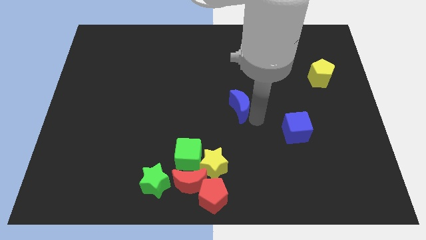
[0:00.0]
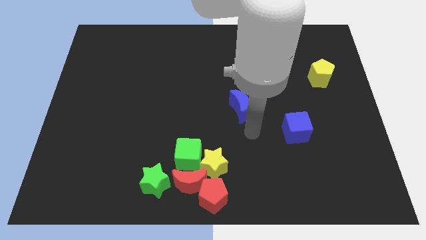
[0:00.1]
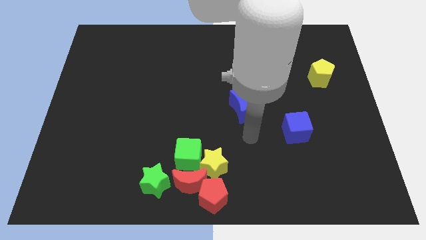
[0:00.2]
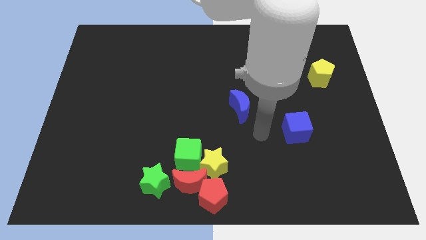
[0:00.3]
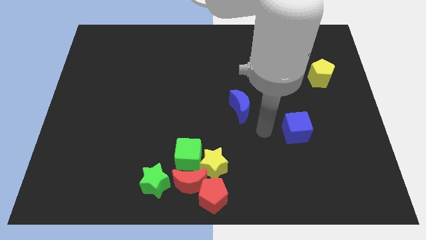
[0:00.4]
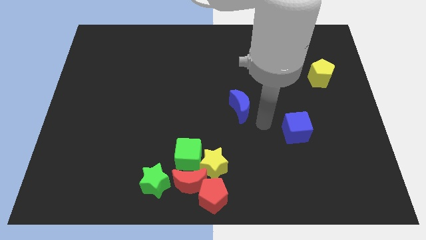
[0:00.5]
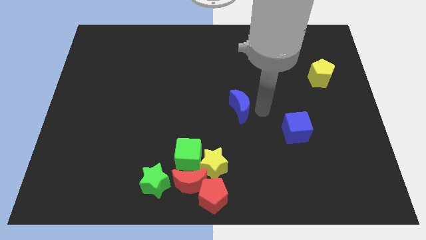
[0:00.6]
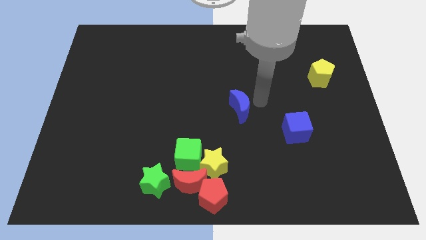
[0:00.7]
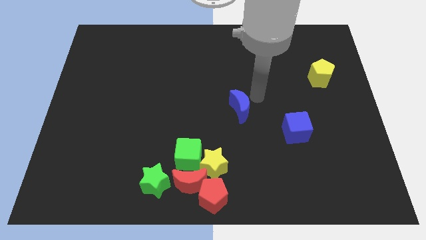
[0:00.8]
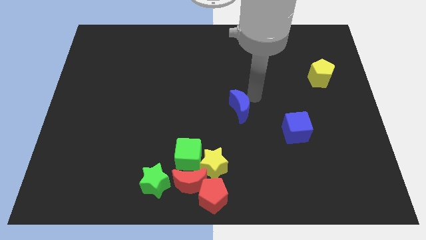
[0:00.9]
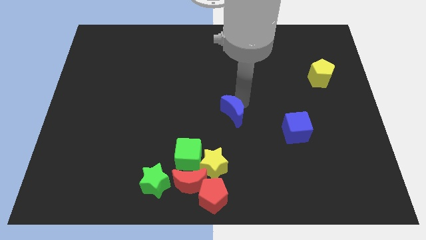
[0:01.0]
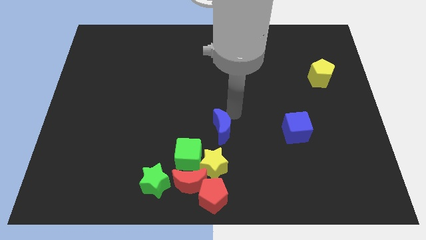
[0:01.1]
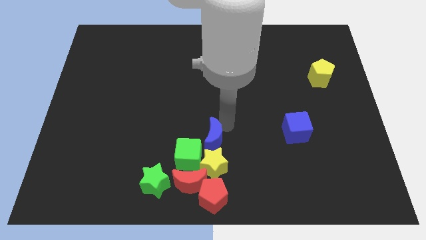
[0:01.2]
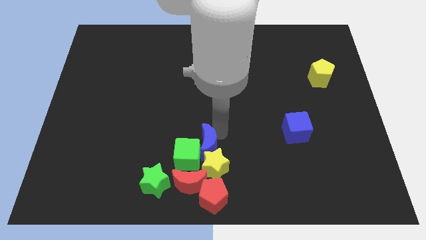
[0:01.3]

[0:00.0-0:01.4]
add the blue crescent to the top of the group of blocks

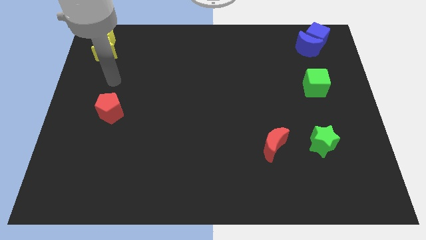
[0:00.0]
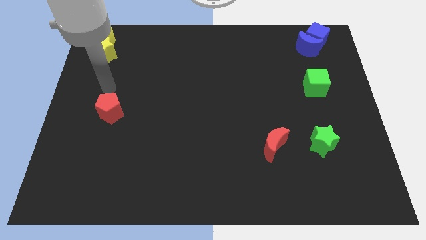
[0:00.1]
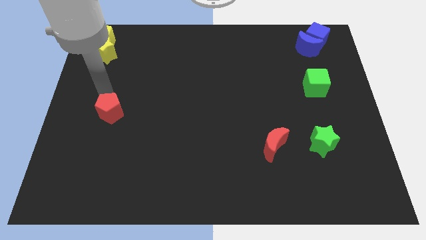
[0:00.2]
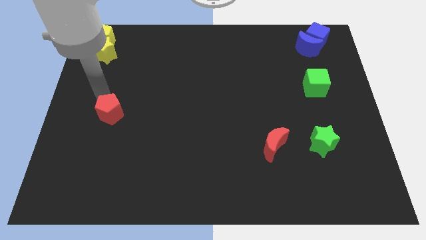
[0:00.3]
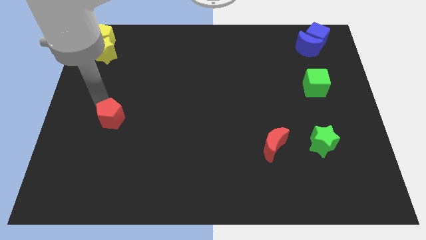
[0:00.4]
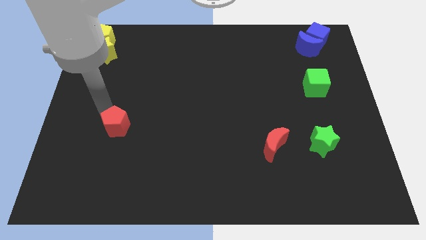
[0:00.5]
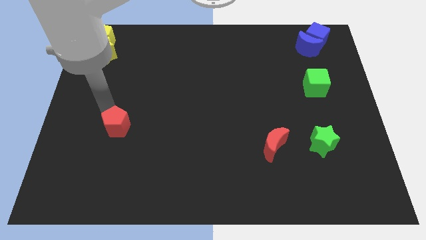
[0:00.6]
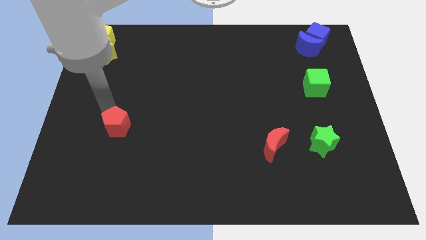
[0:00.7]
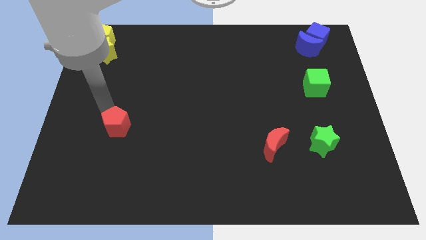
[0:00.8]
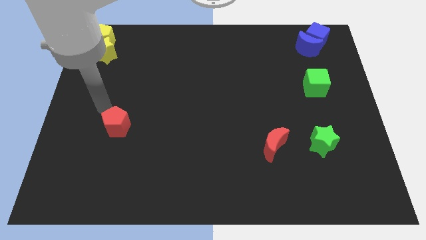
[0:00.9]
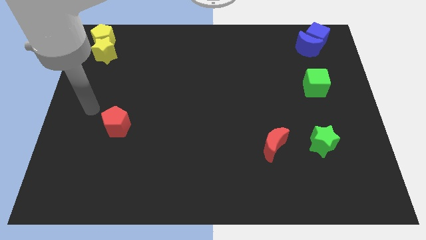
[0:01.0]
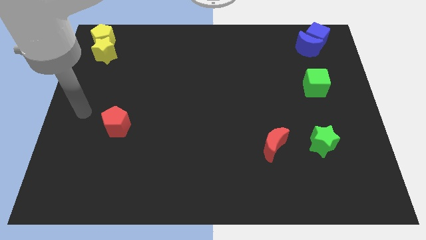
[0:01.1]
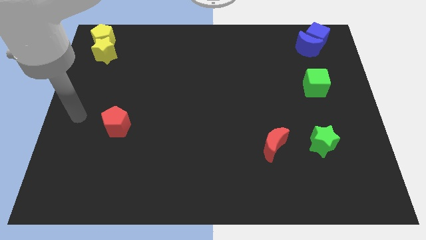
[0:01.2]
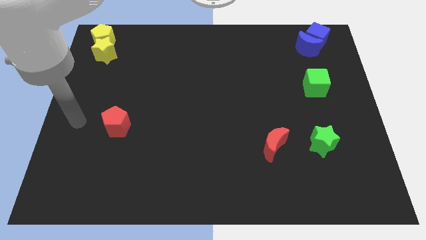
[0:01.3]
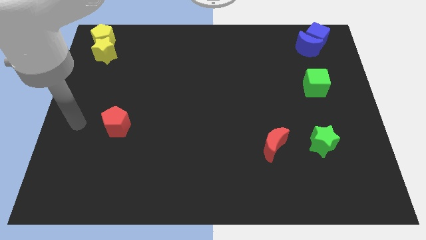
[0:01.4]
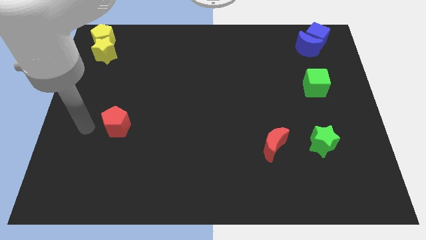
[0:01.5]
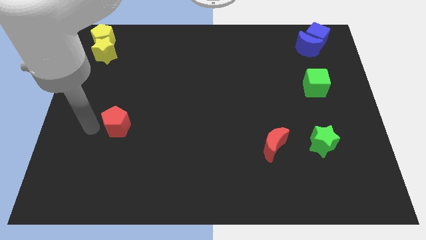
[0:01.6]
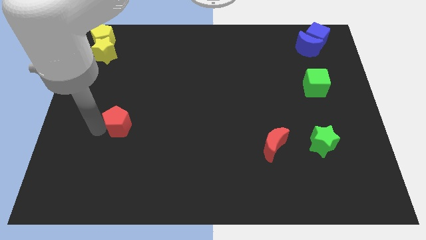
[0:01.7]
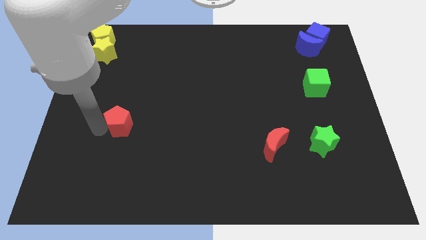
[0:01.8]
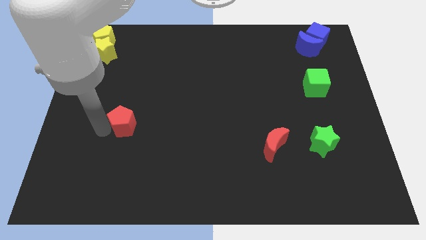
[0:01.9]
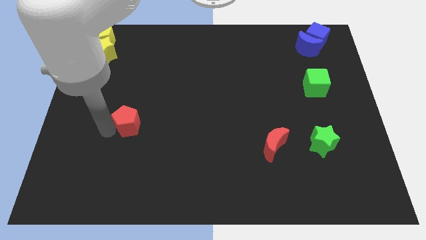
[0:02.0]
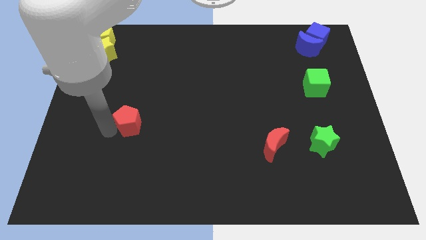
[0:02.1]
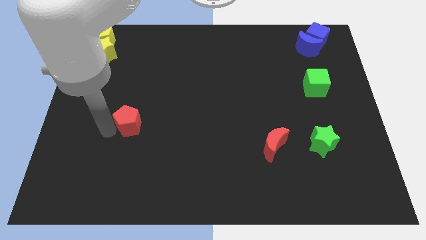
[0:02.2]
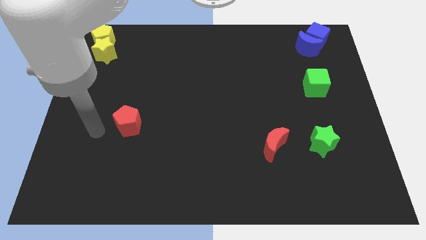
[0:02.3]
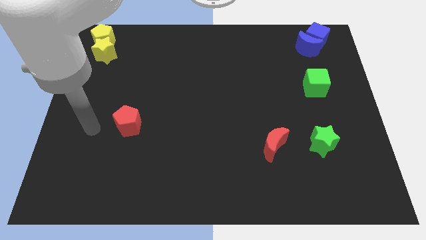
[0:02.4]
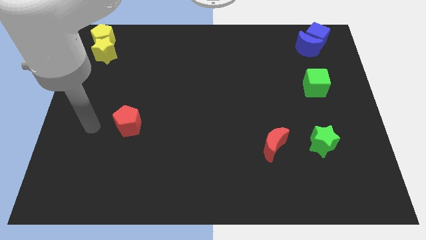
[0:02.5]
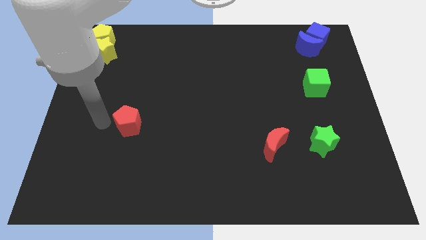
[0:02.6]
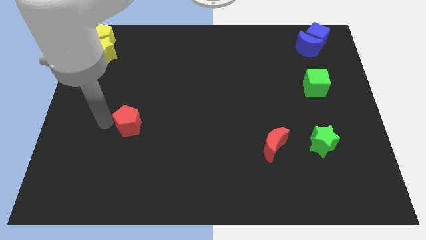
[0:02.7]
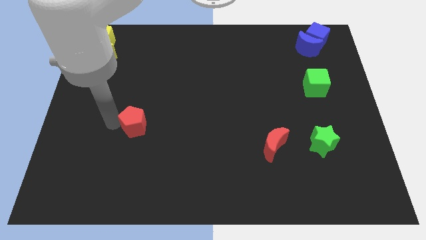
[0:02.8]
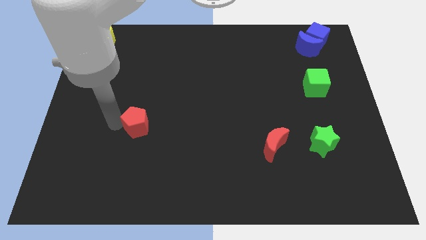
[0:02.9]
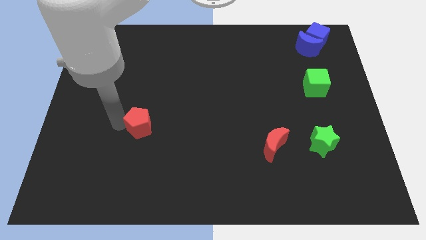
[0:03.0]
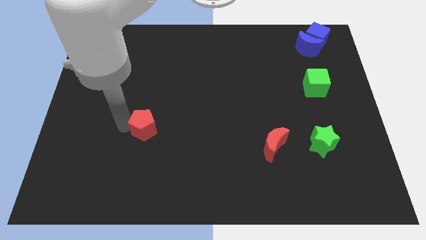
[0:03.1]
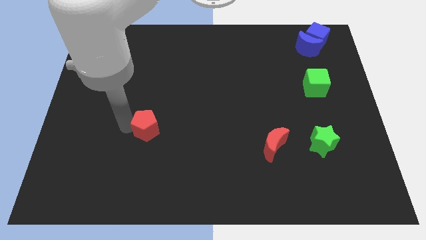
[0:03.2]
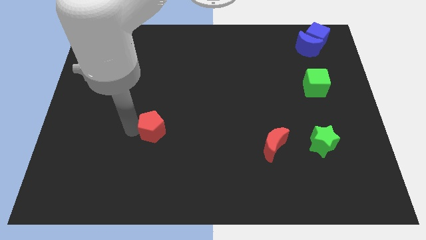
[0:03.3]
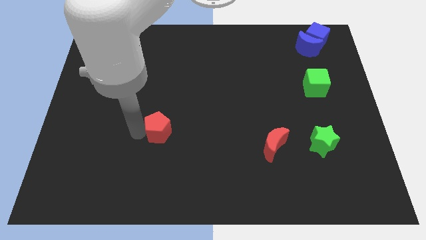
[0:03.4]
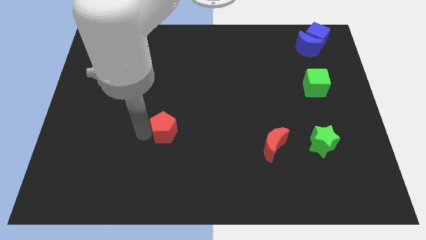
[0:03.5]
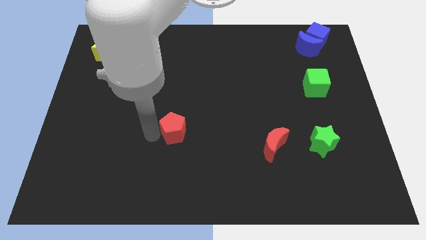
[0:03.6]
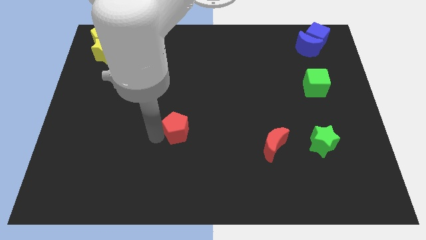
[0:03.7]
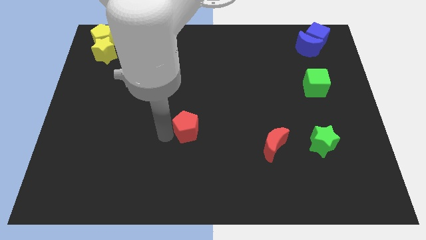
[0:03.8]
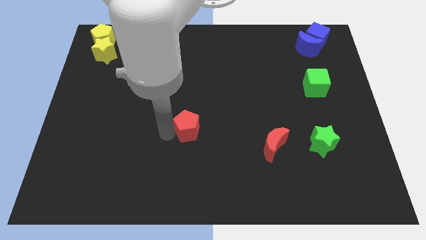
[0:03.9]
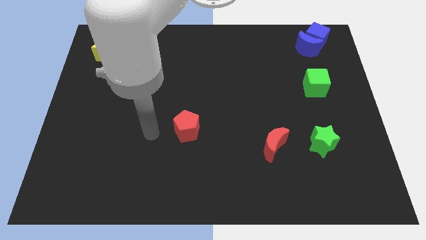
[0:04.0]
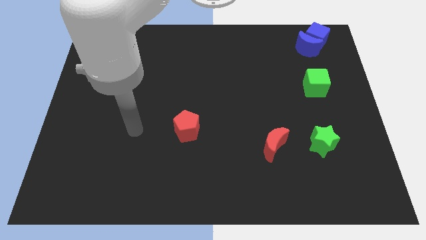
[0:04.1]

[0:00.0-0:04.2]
push red pentagon towards center

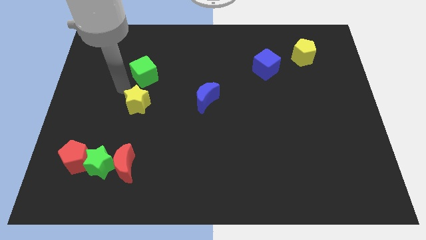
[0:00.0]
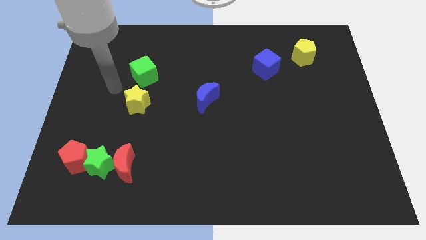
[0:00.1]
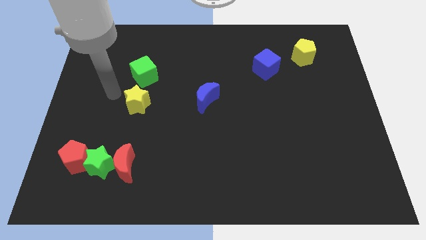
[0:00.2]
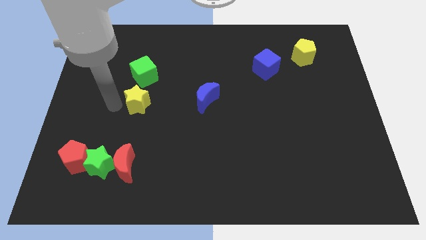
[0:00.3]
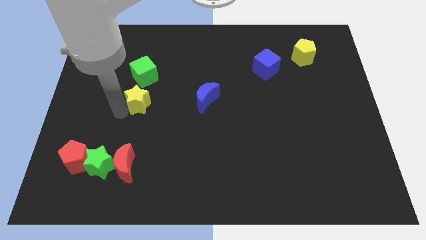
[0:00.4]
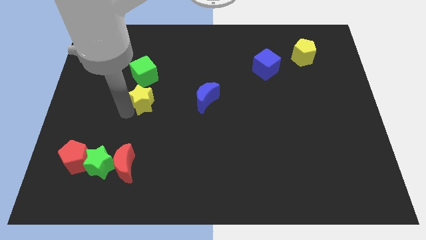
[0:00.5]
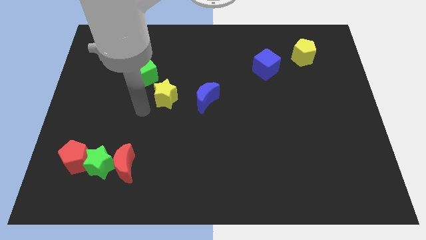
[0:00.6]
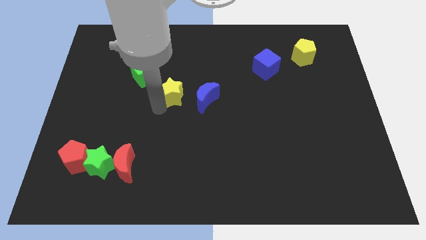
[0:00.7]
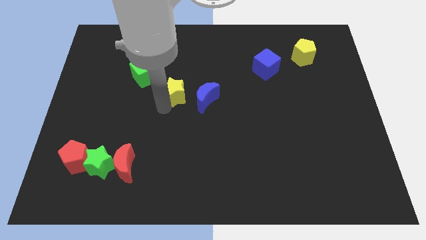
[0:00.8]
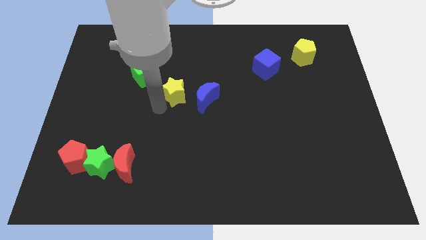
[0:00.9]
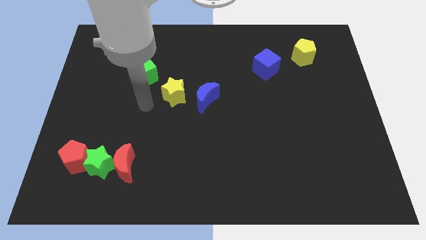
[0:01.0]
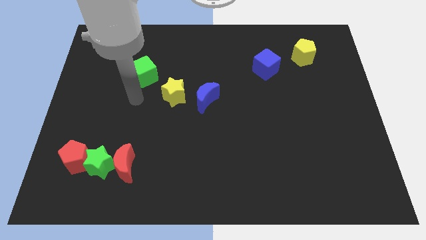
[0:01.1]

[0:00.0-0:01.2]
place the yellow star in between the green cube and blue crescent

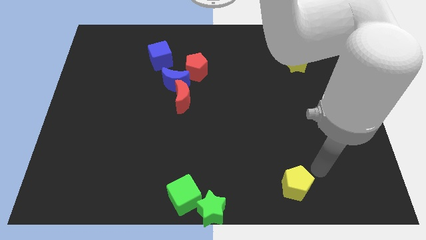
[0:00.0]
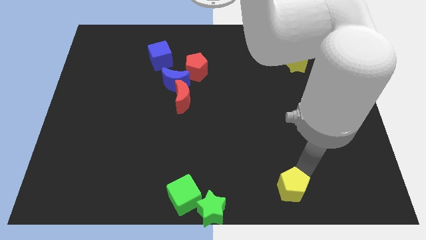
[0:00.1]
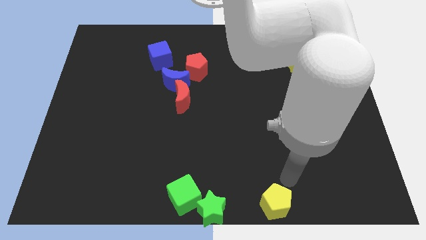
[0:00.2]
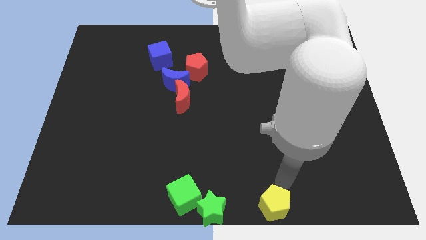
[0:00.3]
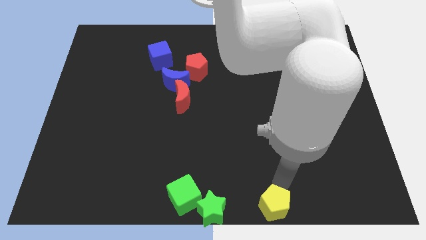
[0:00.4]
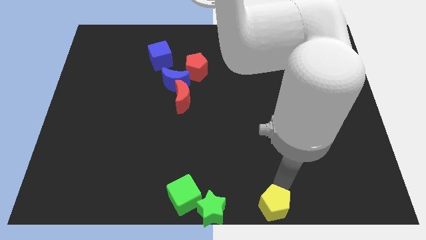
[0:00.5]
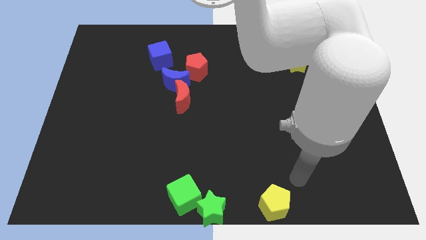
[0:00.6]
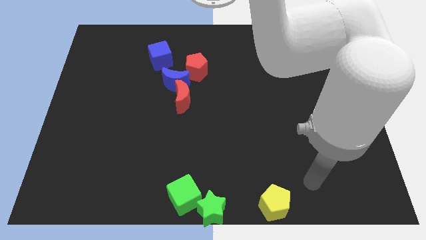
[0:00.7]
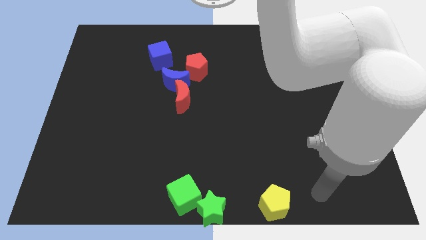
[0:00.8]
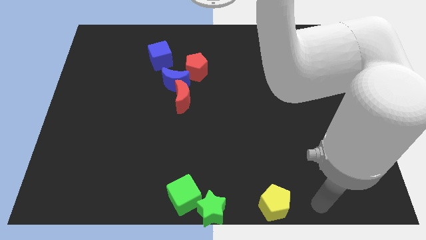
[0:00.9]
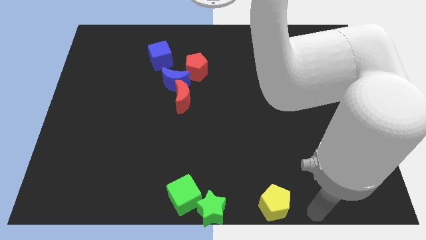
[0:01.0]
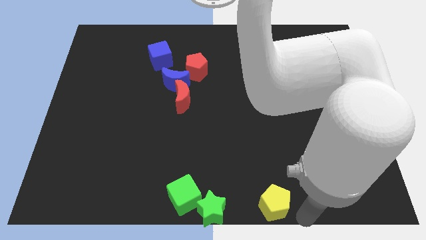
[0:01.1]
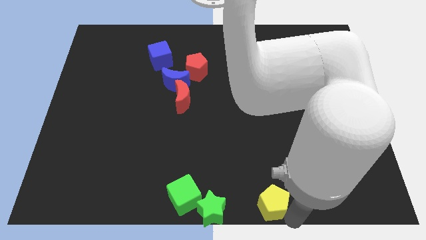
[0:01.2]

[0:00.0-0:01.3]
place the yellow pentagon to the right of the green star

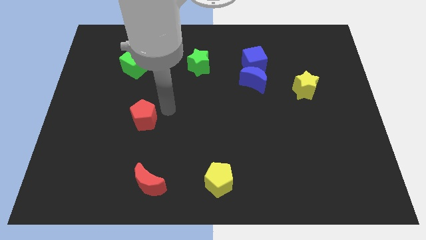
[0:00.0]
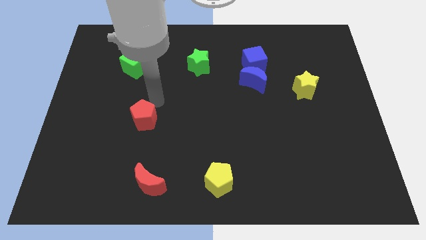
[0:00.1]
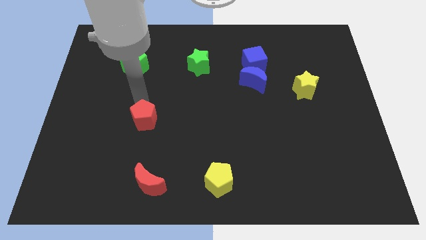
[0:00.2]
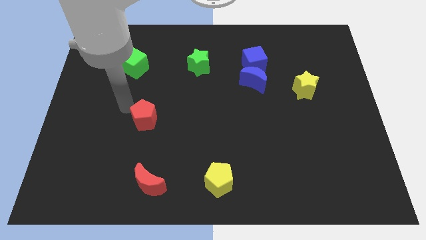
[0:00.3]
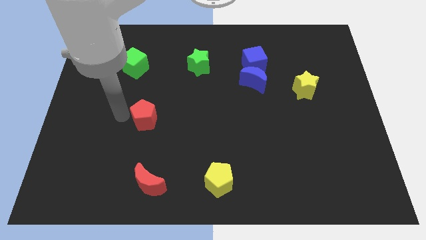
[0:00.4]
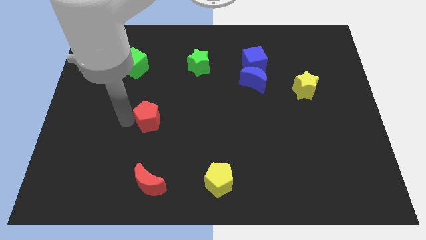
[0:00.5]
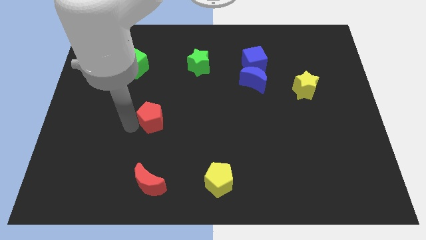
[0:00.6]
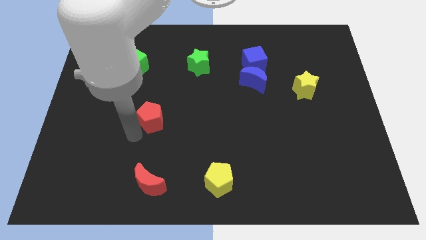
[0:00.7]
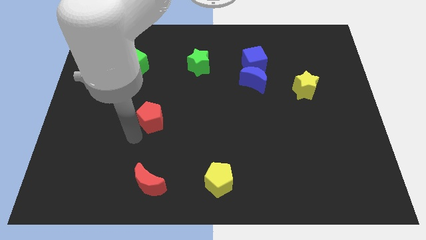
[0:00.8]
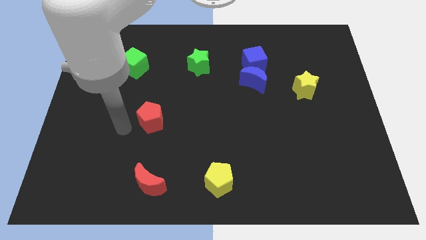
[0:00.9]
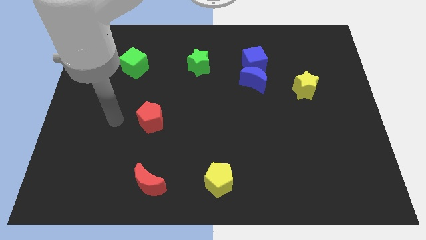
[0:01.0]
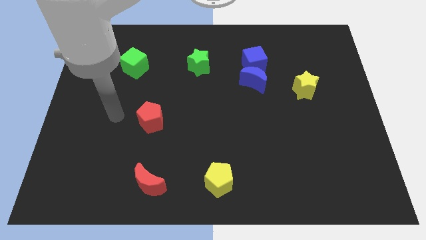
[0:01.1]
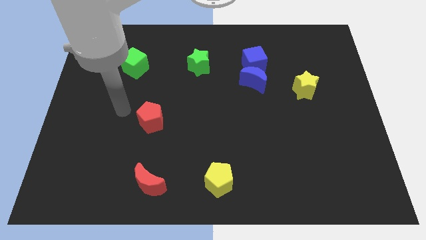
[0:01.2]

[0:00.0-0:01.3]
move the red pentagon above the red moon
